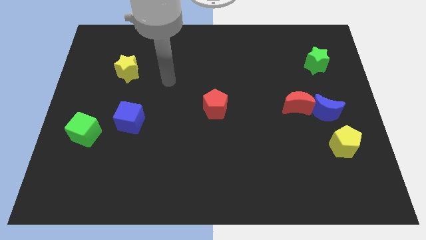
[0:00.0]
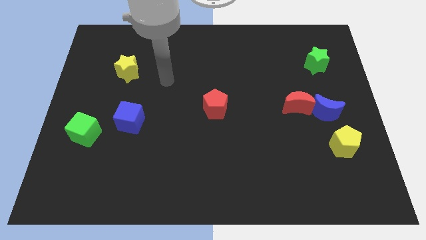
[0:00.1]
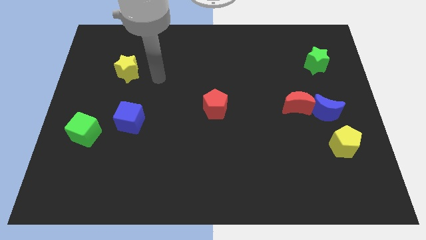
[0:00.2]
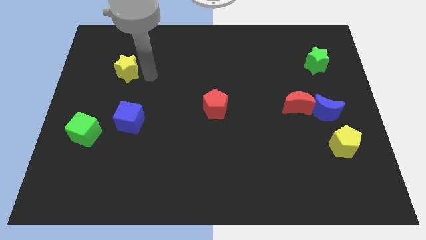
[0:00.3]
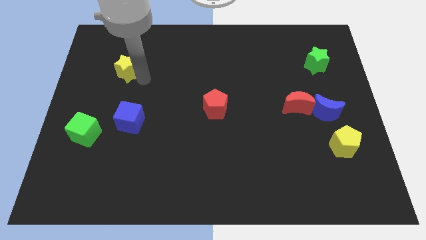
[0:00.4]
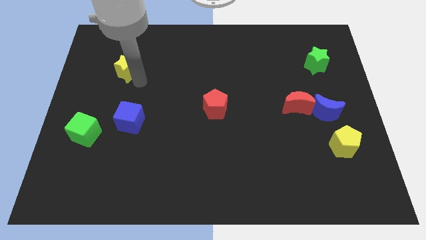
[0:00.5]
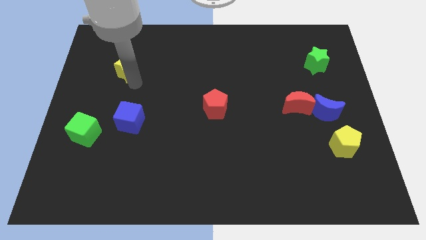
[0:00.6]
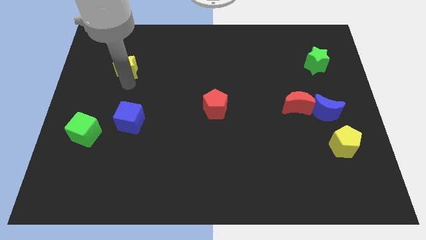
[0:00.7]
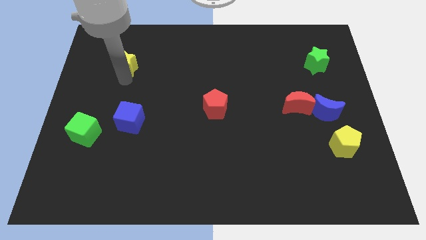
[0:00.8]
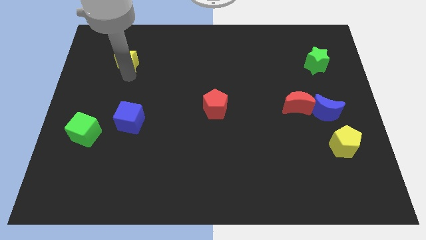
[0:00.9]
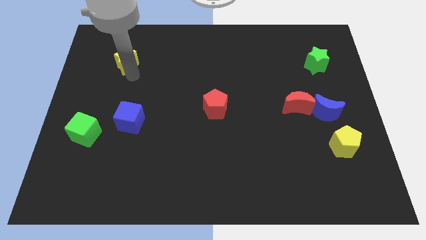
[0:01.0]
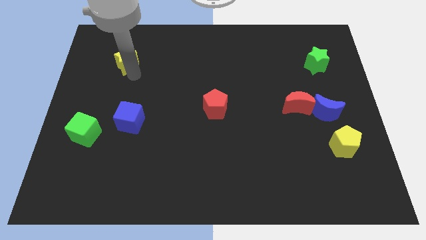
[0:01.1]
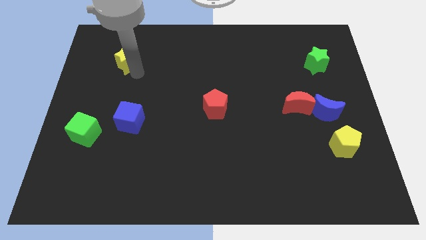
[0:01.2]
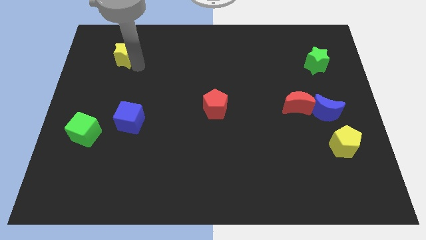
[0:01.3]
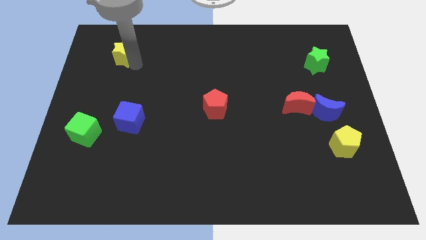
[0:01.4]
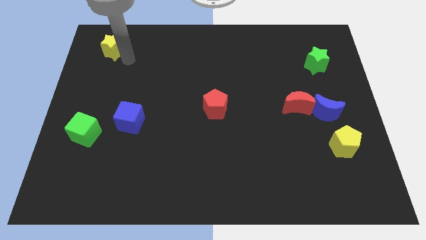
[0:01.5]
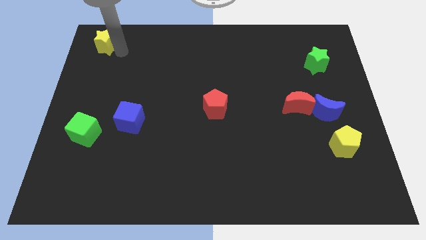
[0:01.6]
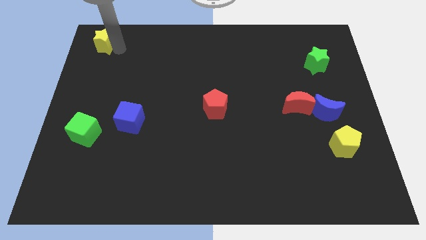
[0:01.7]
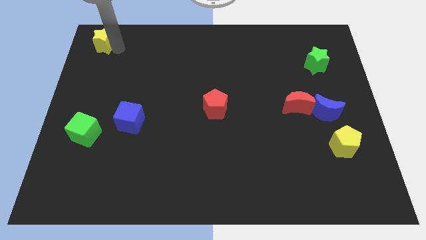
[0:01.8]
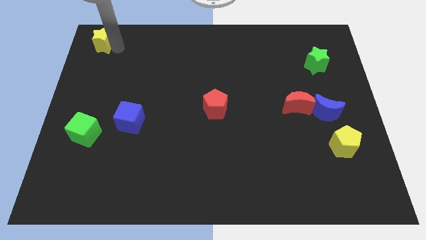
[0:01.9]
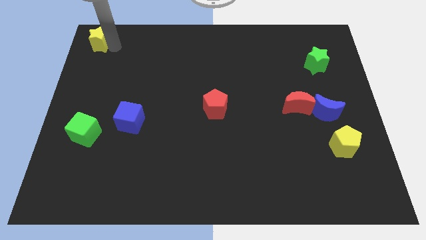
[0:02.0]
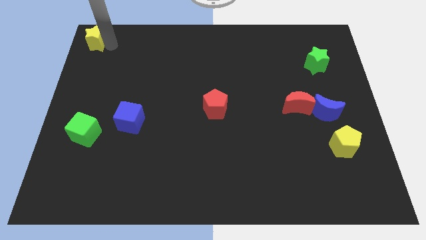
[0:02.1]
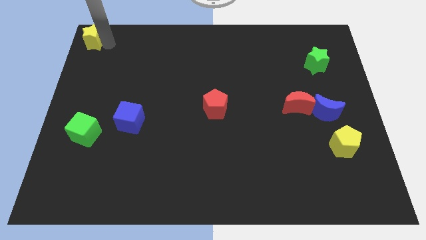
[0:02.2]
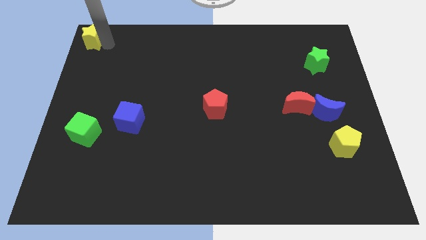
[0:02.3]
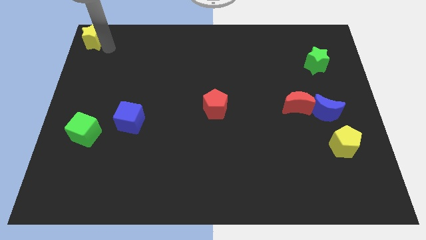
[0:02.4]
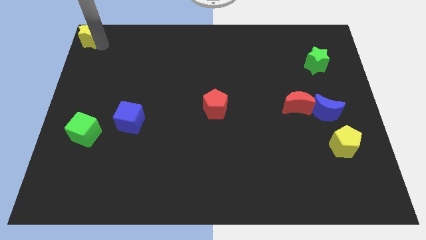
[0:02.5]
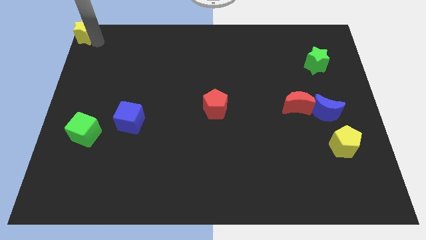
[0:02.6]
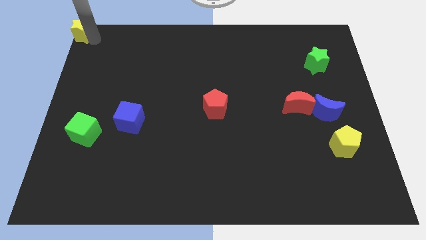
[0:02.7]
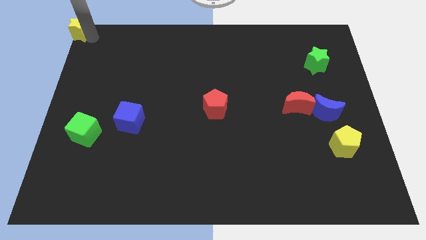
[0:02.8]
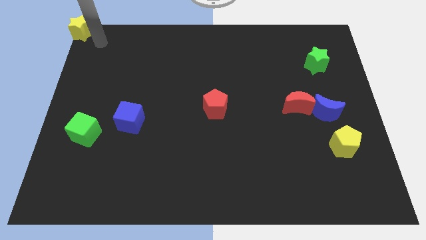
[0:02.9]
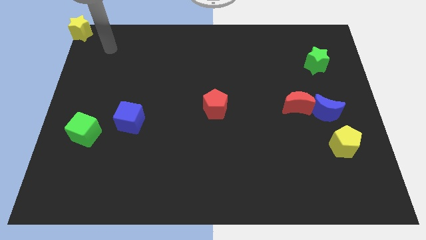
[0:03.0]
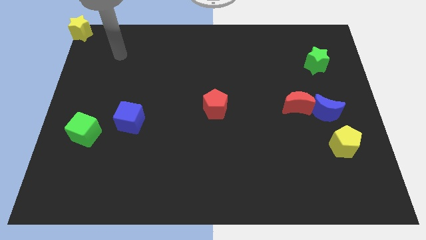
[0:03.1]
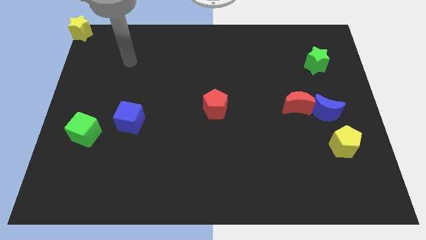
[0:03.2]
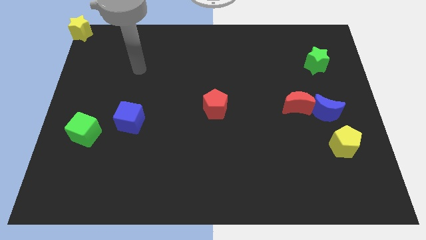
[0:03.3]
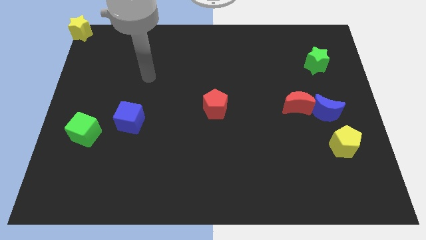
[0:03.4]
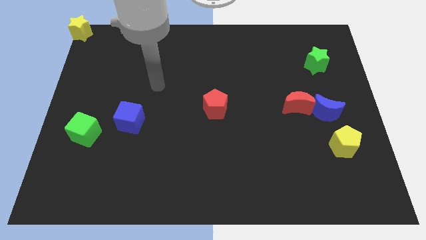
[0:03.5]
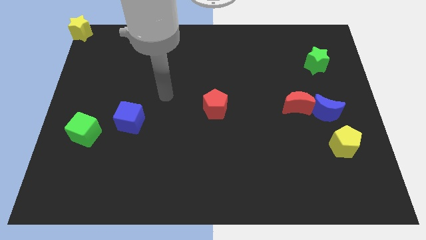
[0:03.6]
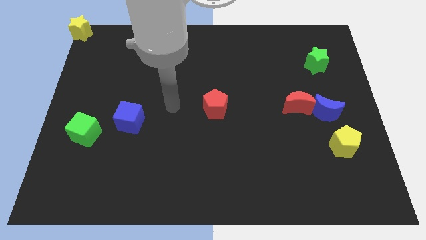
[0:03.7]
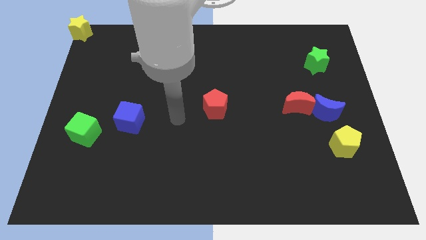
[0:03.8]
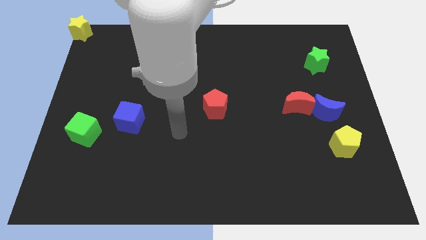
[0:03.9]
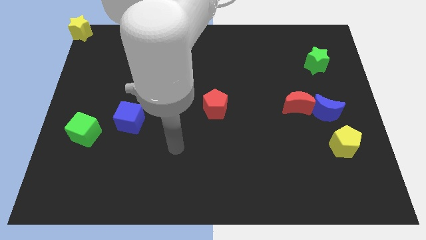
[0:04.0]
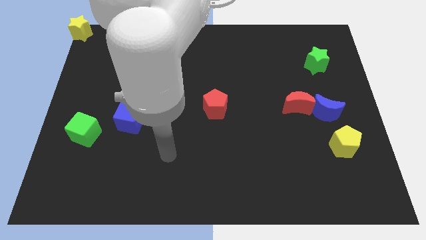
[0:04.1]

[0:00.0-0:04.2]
push the yellow star towards the top left corner of the board

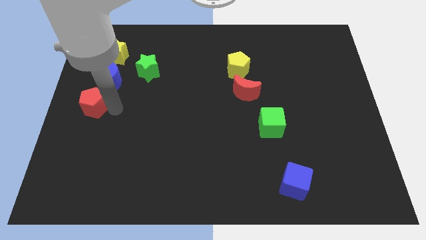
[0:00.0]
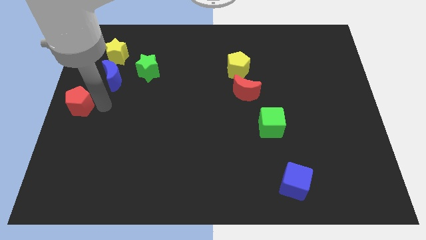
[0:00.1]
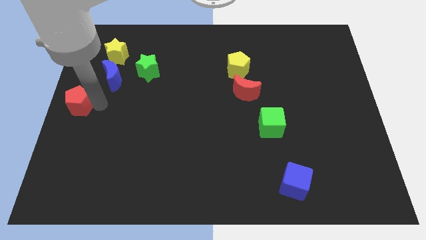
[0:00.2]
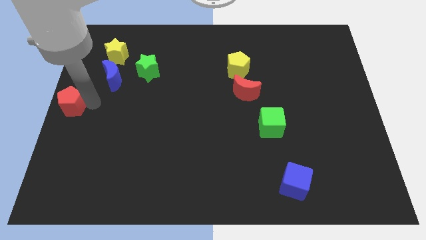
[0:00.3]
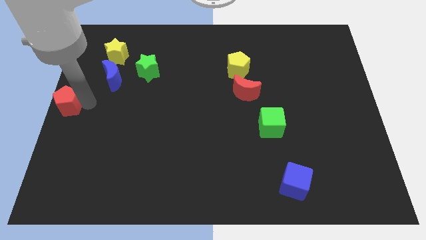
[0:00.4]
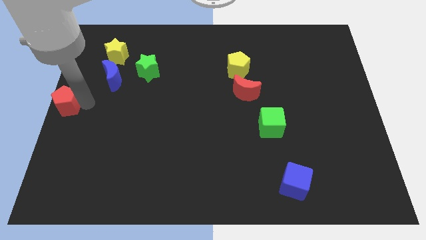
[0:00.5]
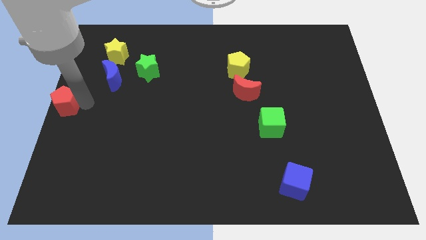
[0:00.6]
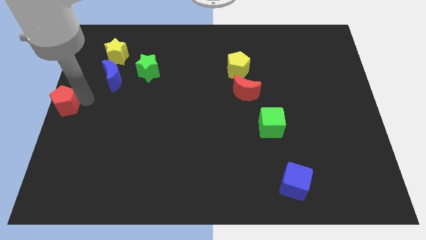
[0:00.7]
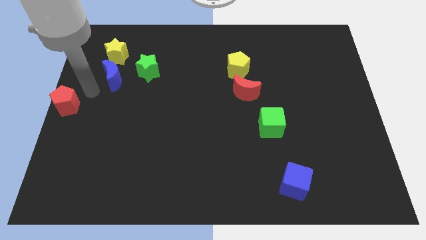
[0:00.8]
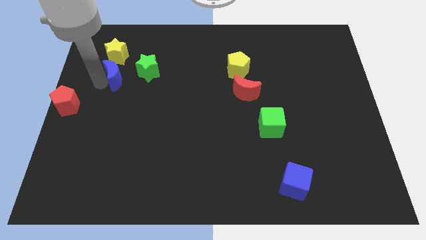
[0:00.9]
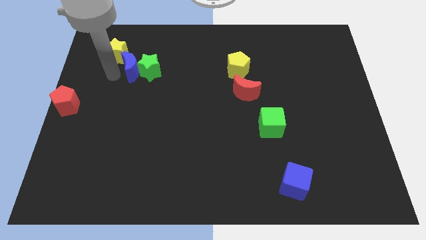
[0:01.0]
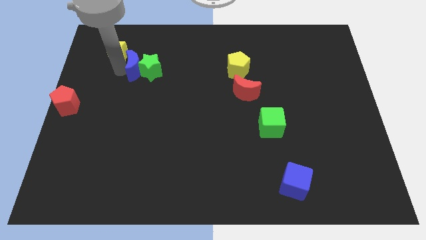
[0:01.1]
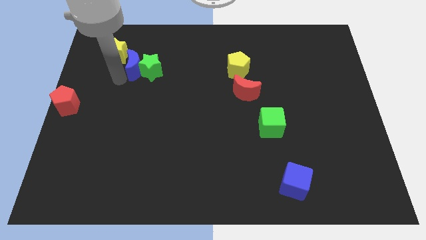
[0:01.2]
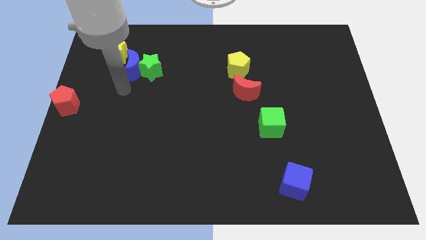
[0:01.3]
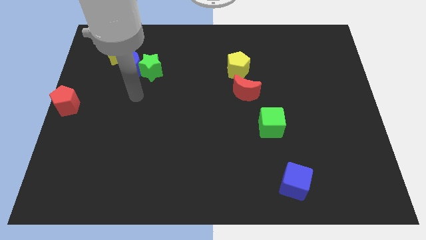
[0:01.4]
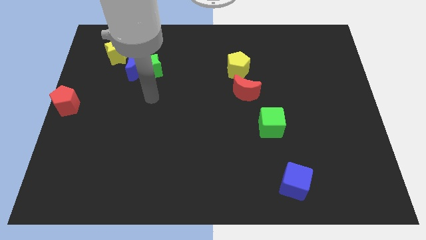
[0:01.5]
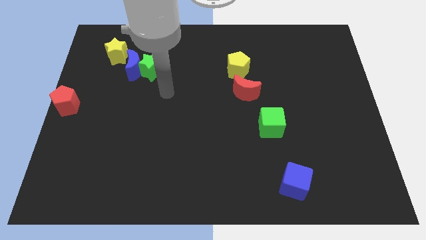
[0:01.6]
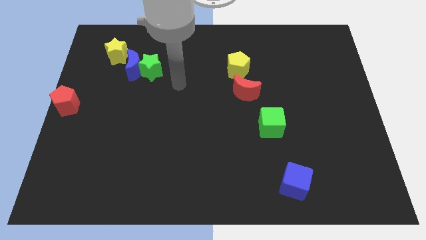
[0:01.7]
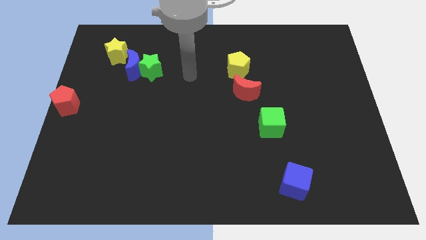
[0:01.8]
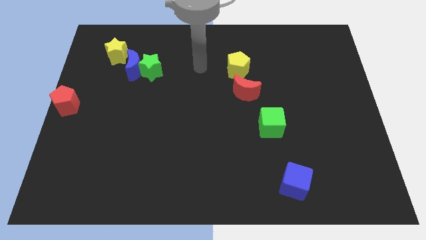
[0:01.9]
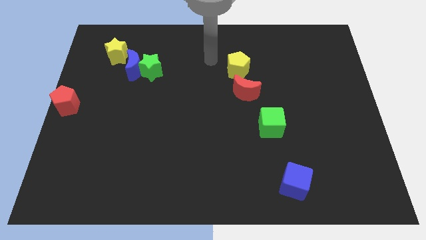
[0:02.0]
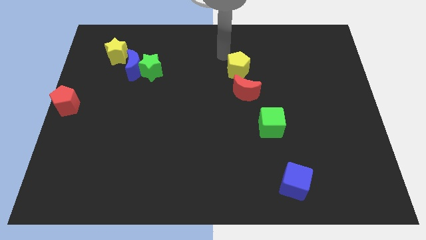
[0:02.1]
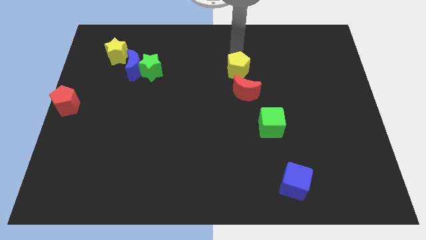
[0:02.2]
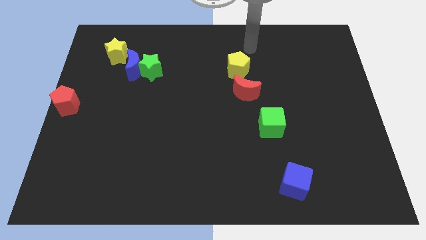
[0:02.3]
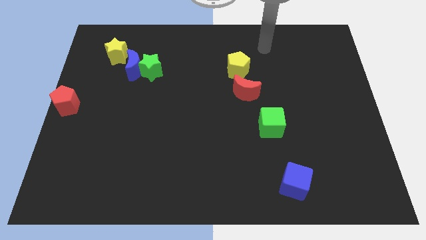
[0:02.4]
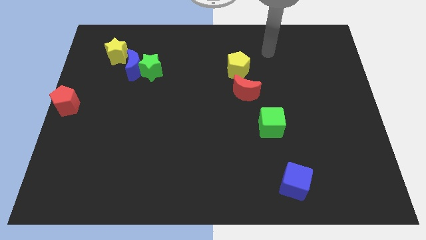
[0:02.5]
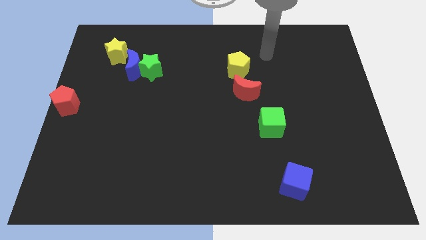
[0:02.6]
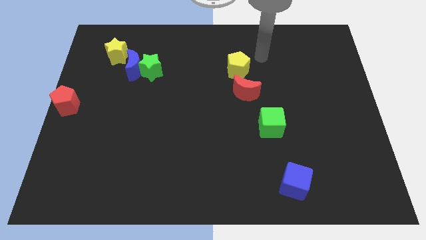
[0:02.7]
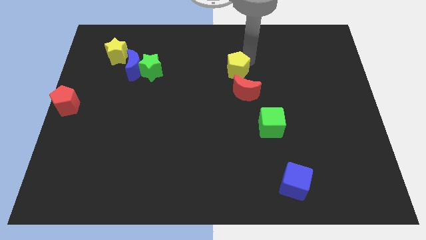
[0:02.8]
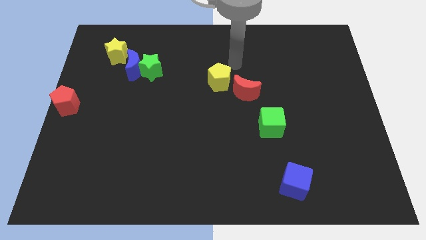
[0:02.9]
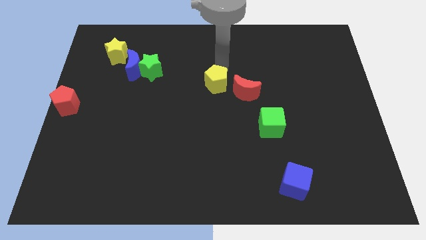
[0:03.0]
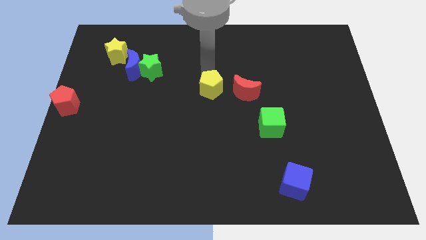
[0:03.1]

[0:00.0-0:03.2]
place the blue moon in between the yellow star and green star

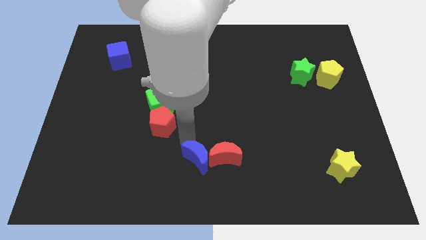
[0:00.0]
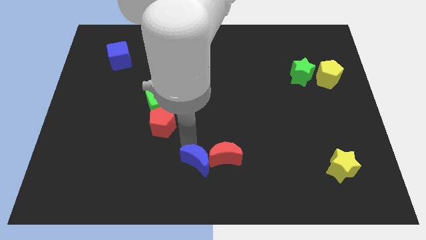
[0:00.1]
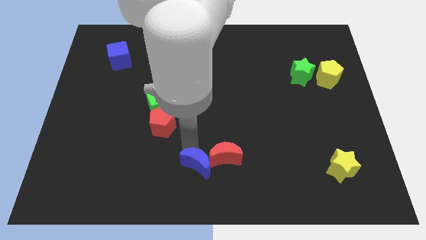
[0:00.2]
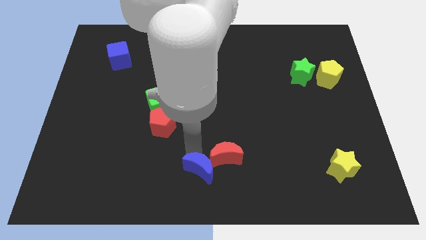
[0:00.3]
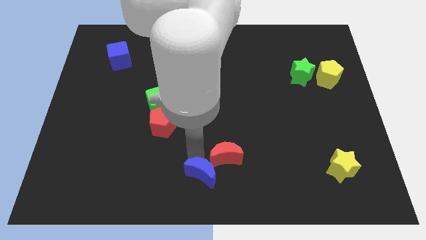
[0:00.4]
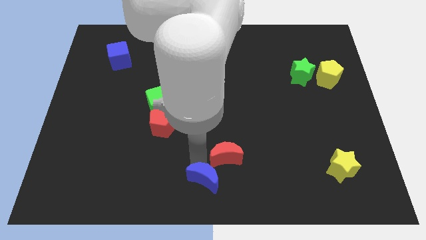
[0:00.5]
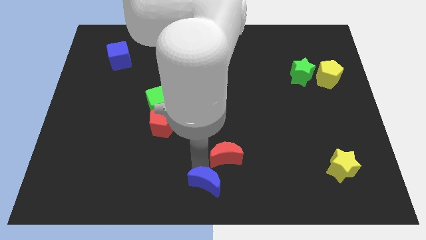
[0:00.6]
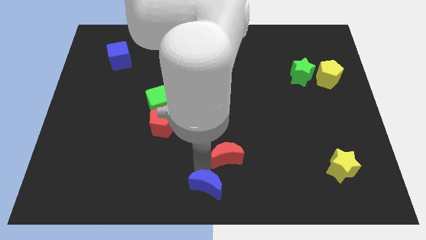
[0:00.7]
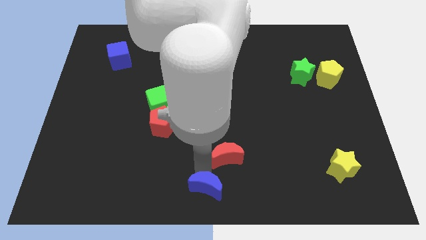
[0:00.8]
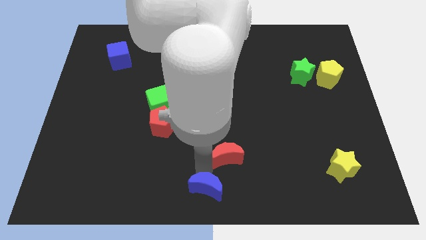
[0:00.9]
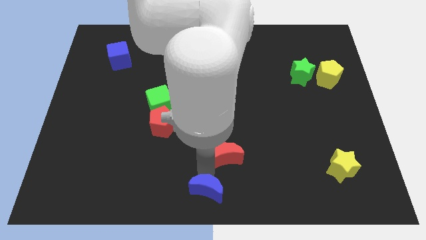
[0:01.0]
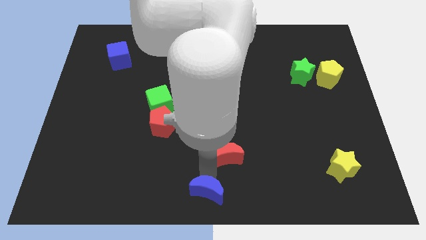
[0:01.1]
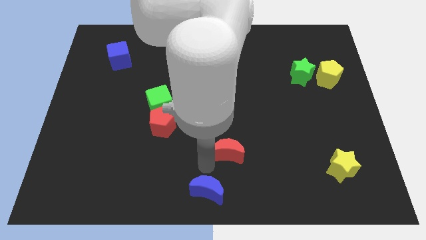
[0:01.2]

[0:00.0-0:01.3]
push the blue cube towards the bottom center of the table

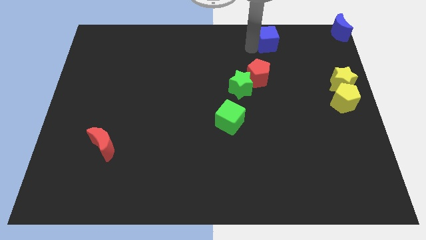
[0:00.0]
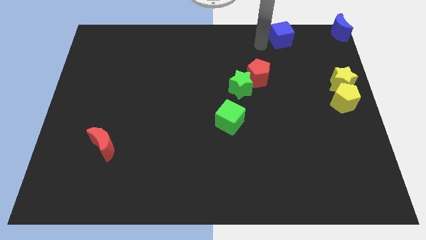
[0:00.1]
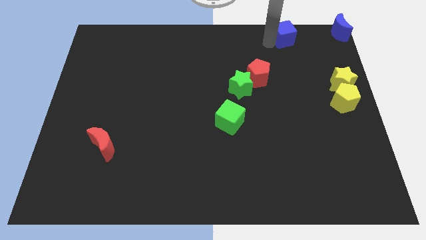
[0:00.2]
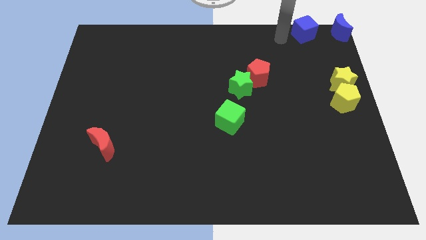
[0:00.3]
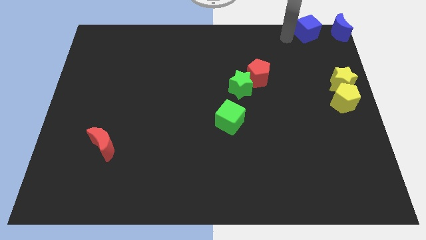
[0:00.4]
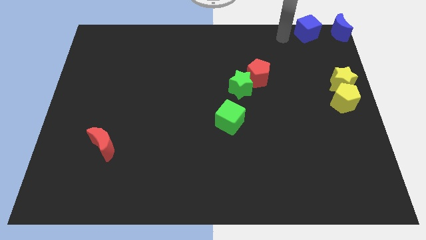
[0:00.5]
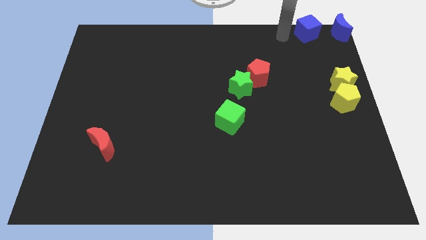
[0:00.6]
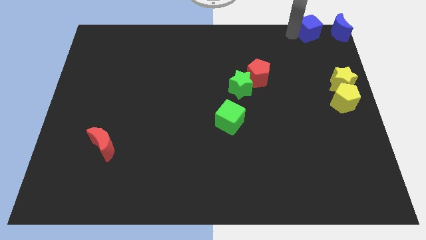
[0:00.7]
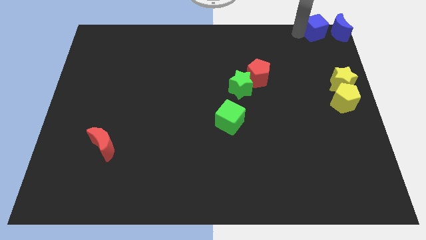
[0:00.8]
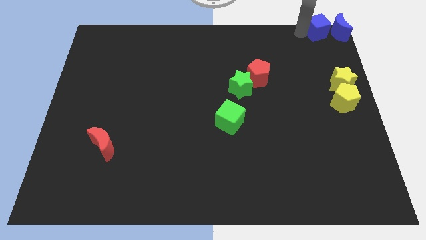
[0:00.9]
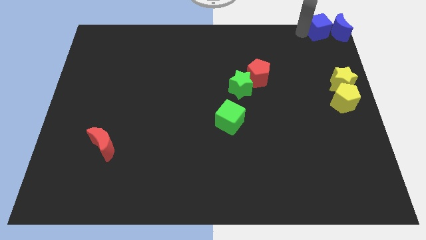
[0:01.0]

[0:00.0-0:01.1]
place blue cube beside blue crescent
